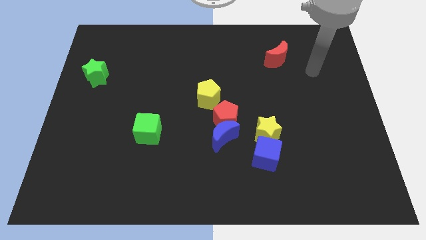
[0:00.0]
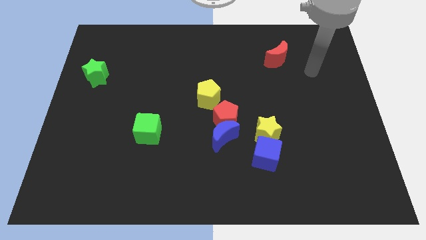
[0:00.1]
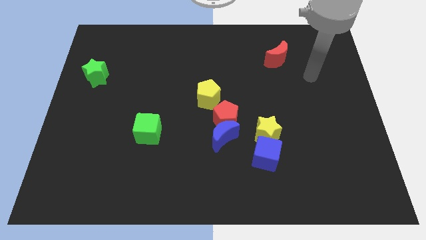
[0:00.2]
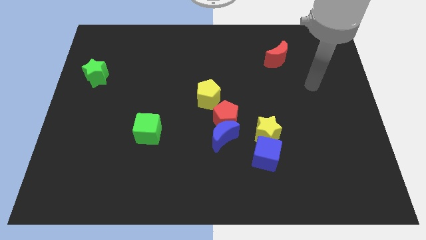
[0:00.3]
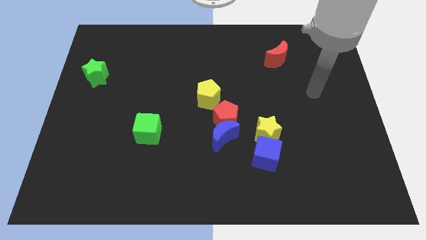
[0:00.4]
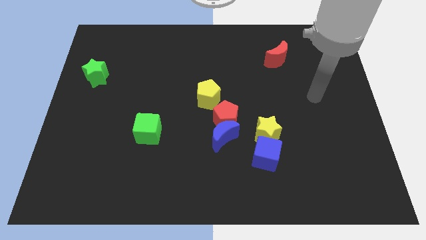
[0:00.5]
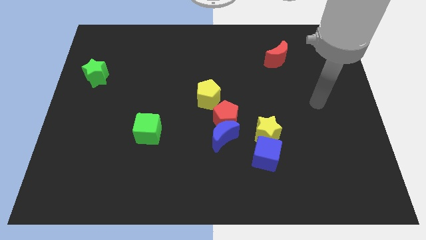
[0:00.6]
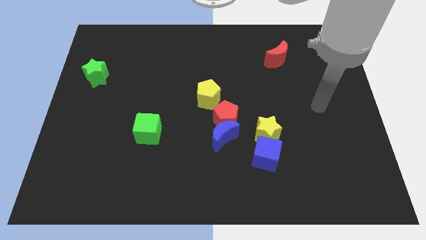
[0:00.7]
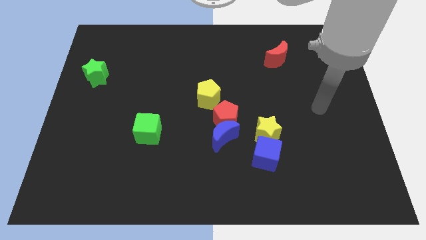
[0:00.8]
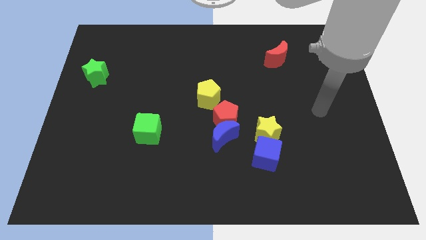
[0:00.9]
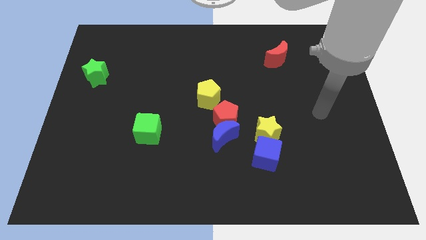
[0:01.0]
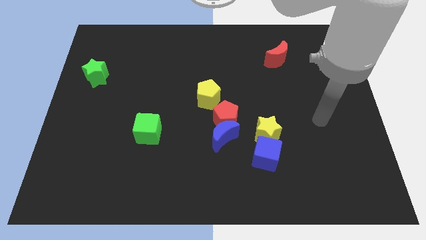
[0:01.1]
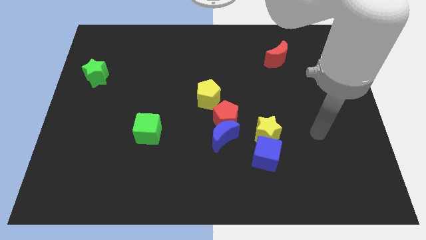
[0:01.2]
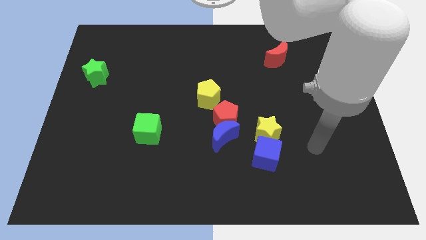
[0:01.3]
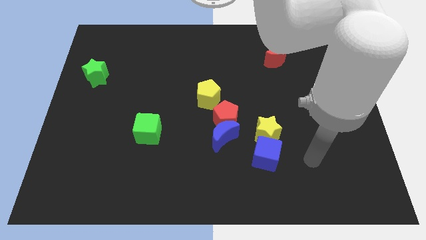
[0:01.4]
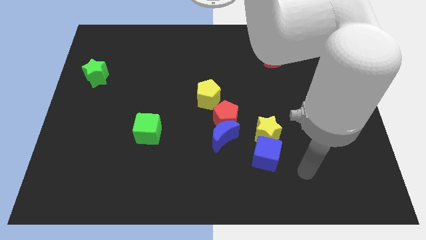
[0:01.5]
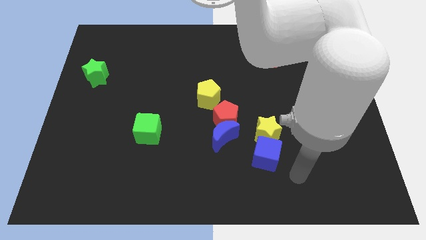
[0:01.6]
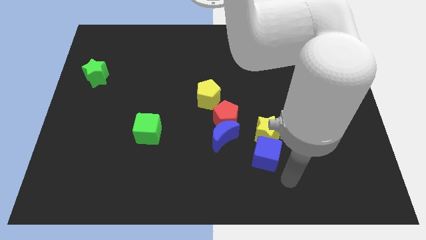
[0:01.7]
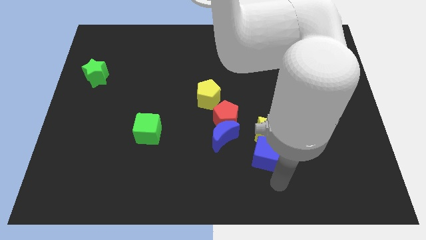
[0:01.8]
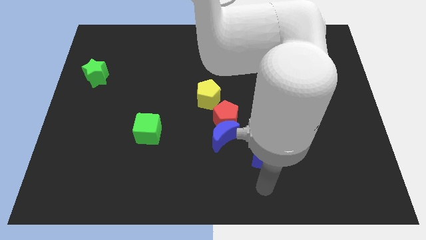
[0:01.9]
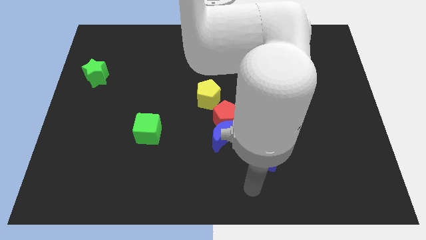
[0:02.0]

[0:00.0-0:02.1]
slide your arm to the bottom left of blue cube

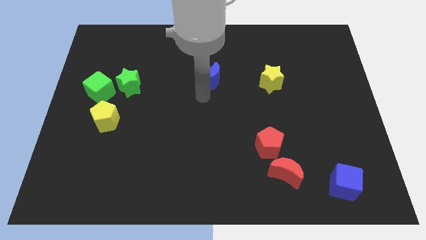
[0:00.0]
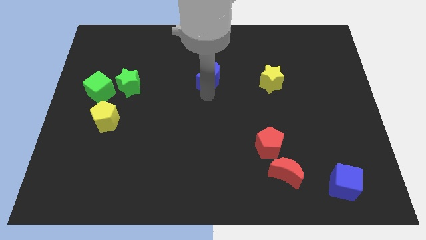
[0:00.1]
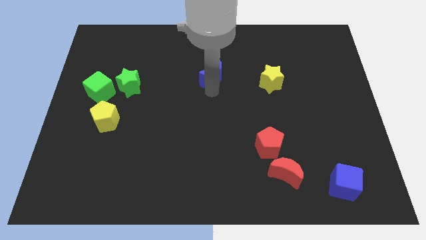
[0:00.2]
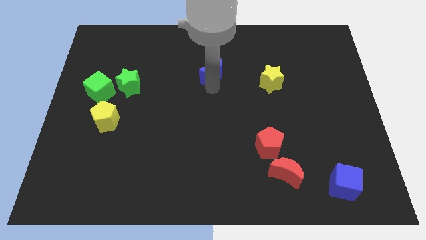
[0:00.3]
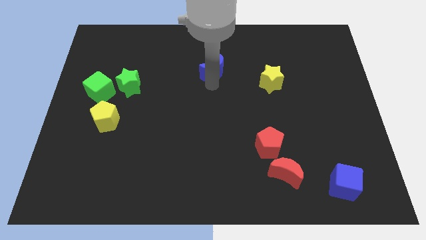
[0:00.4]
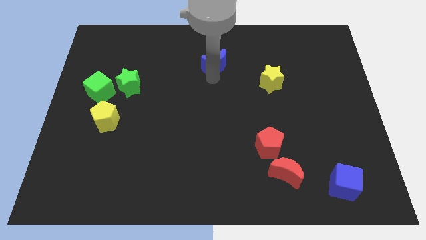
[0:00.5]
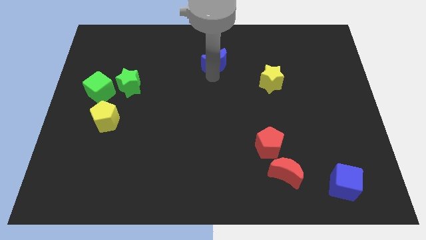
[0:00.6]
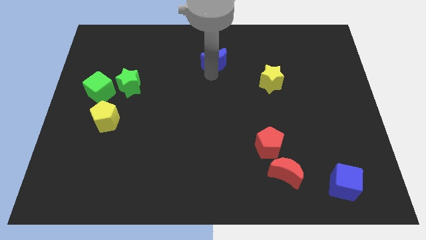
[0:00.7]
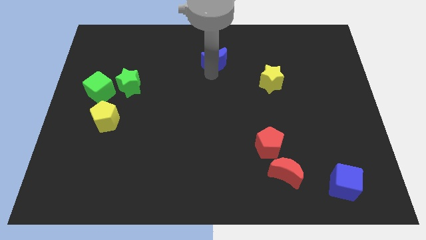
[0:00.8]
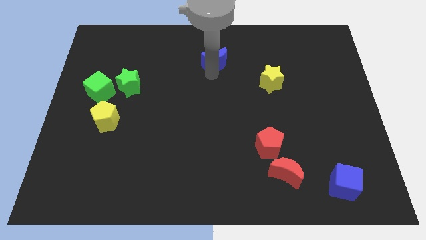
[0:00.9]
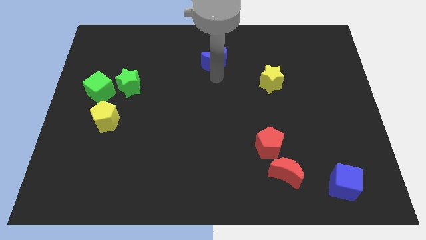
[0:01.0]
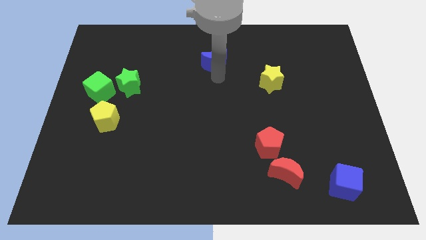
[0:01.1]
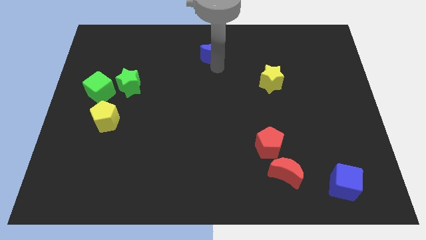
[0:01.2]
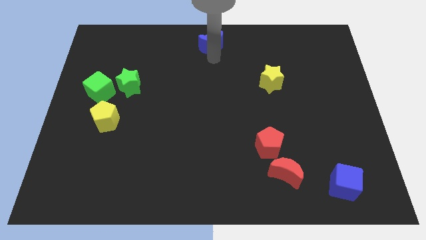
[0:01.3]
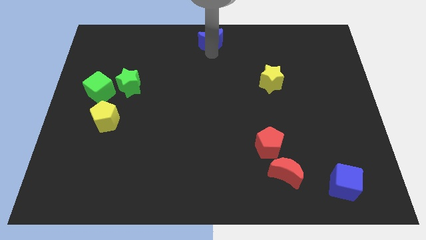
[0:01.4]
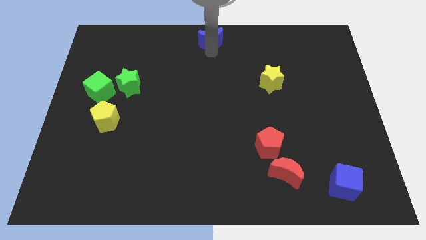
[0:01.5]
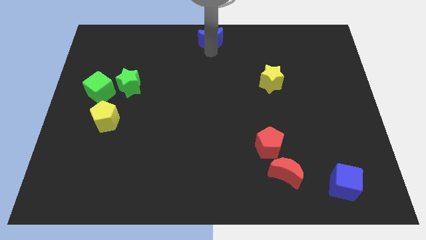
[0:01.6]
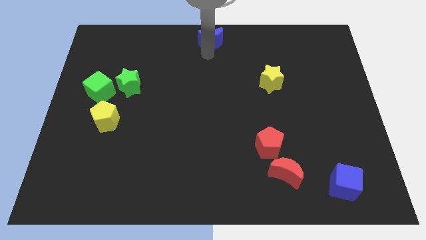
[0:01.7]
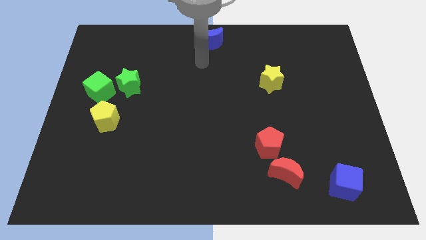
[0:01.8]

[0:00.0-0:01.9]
push the blue moon to the top center

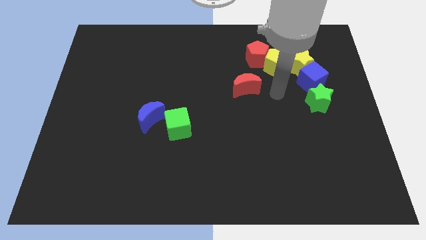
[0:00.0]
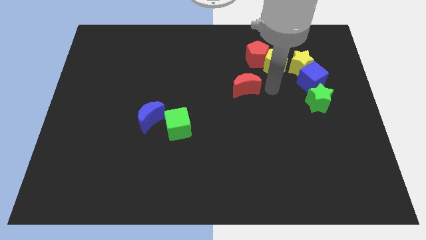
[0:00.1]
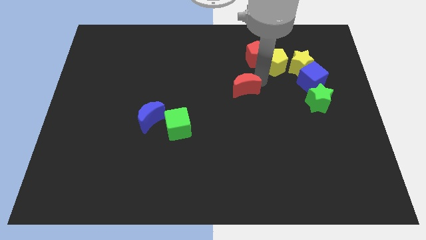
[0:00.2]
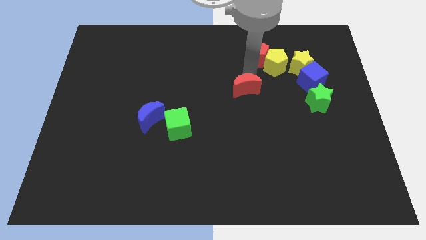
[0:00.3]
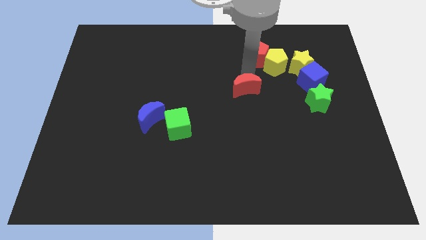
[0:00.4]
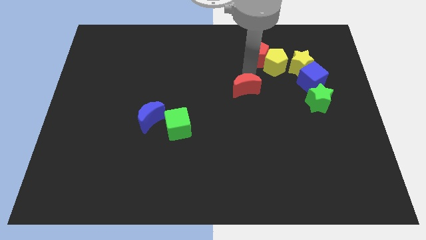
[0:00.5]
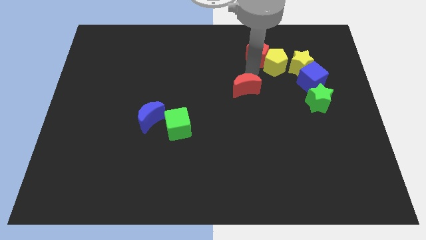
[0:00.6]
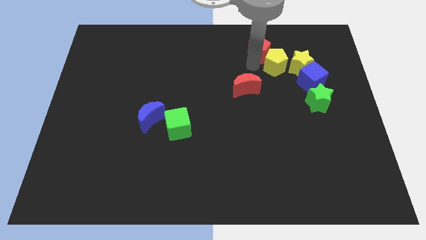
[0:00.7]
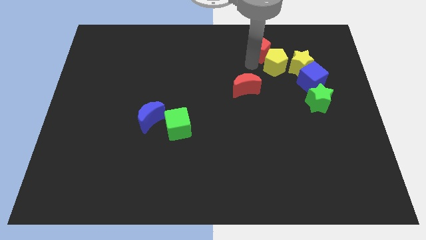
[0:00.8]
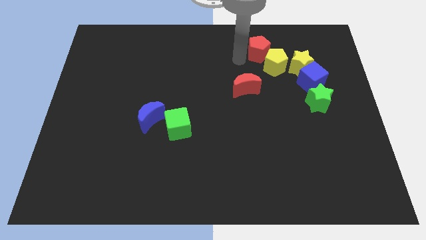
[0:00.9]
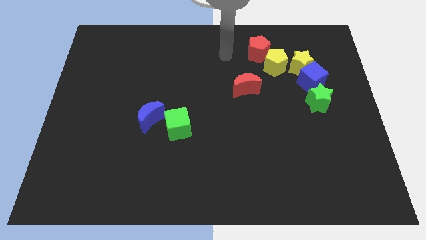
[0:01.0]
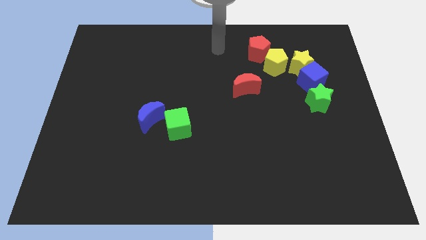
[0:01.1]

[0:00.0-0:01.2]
push the red pentagon slightly to the top

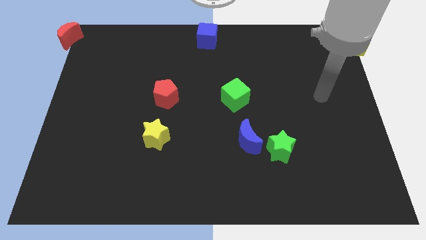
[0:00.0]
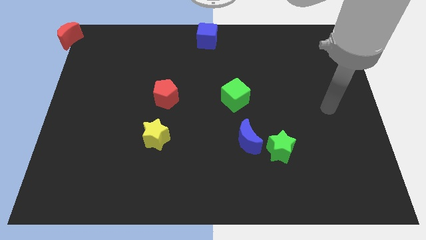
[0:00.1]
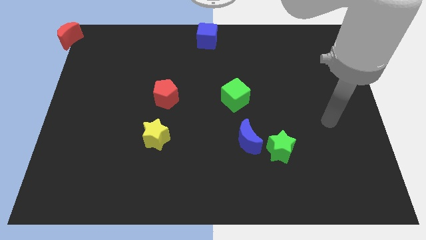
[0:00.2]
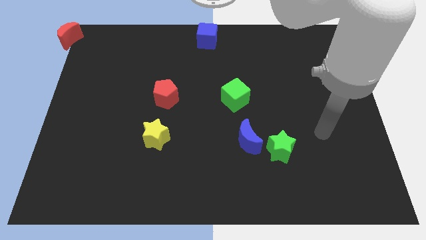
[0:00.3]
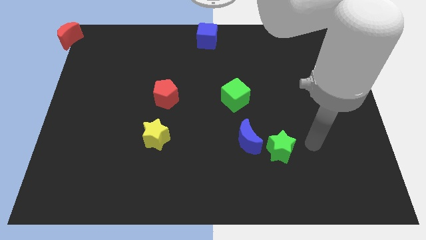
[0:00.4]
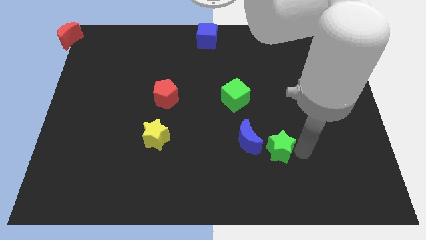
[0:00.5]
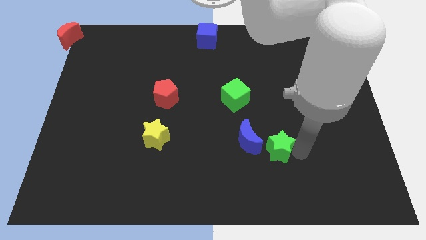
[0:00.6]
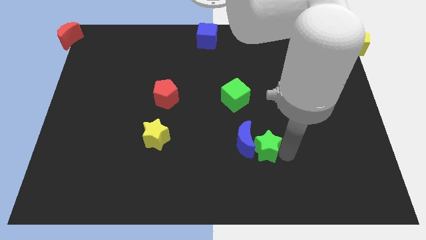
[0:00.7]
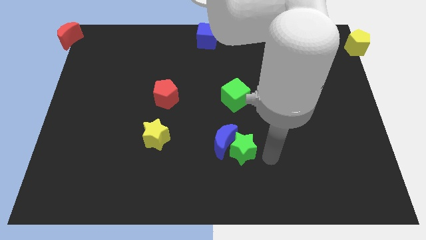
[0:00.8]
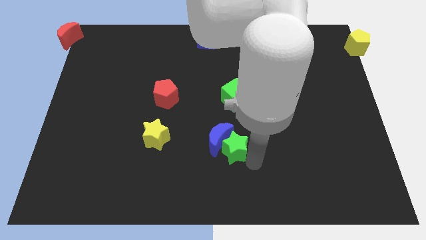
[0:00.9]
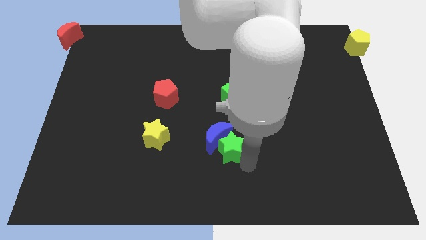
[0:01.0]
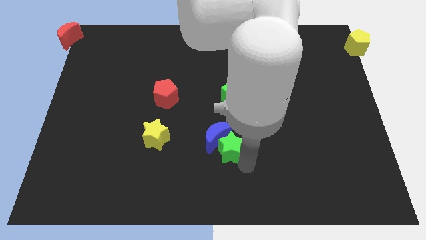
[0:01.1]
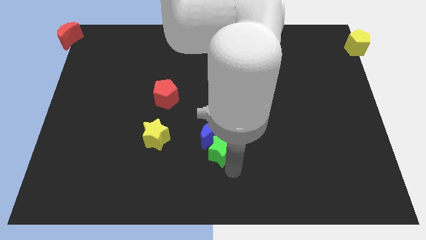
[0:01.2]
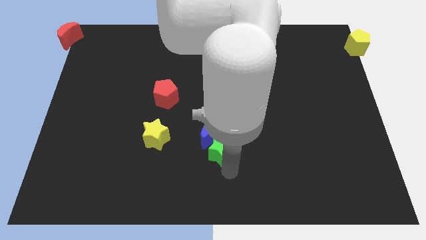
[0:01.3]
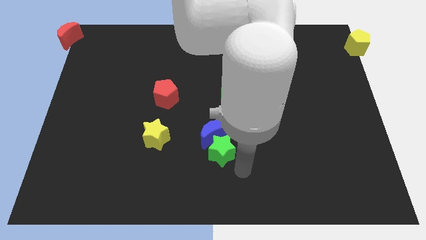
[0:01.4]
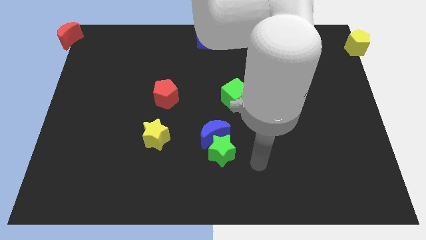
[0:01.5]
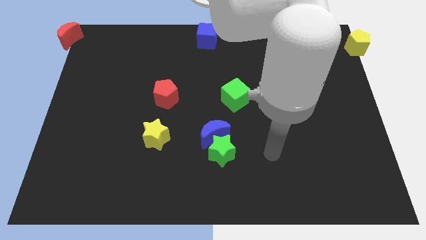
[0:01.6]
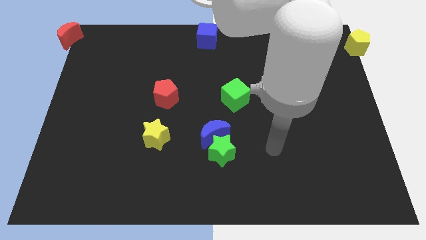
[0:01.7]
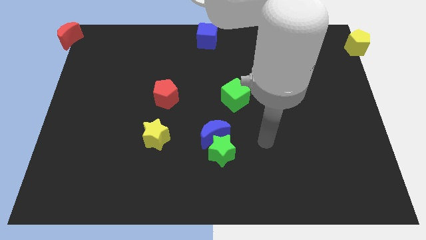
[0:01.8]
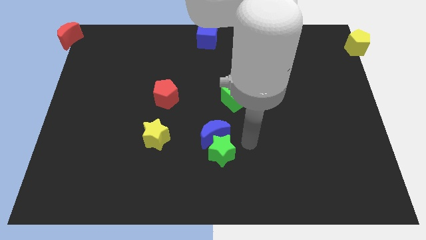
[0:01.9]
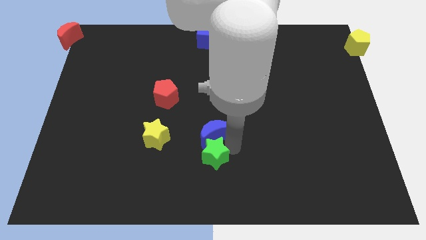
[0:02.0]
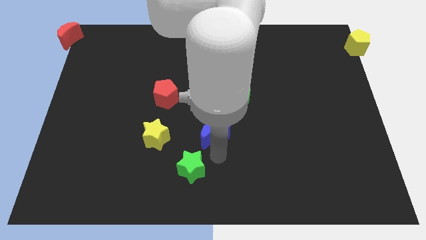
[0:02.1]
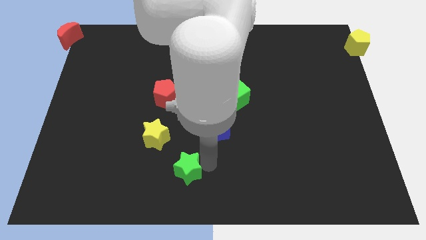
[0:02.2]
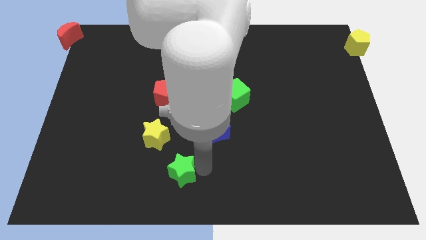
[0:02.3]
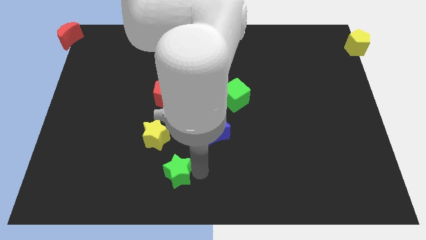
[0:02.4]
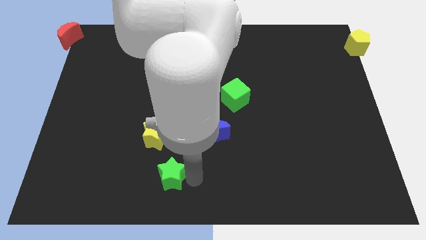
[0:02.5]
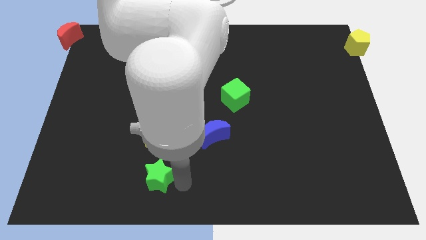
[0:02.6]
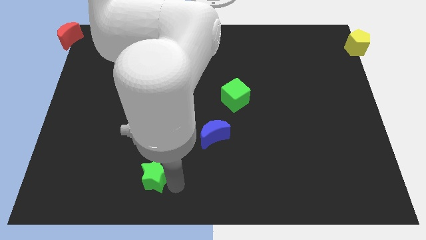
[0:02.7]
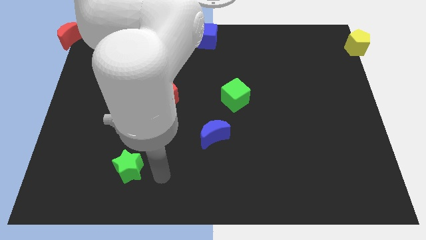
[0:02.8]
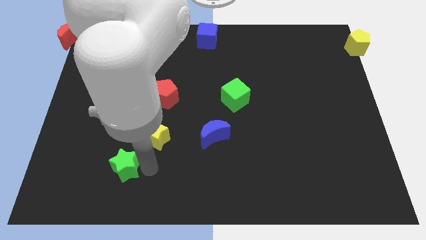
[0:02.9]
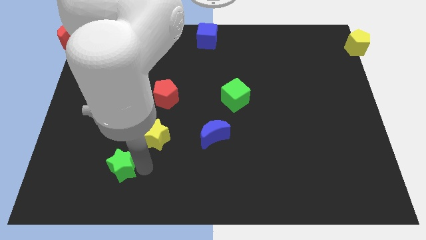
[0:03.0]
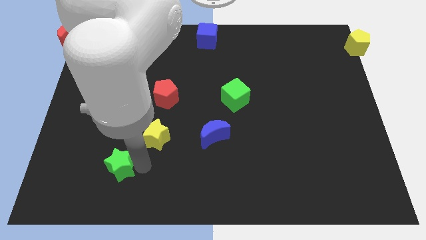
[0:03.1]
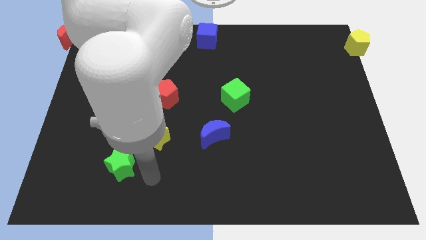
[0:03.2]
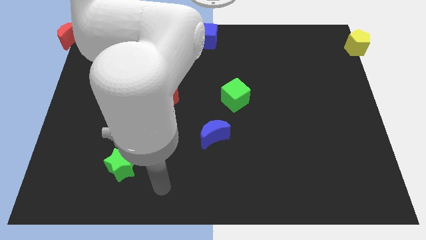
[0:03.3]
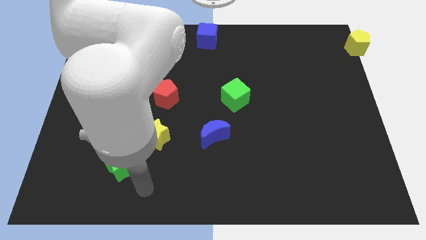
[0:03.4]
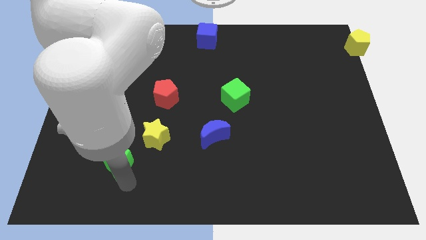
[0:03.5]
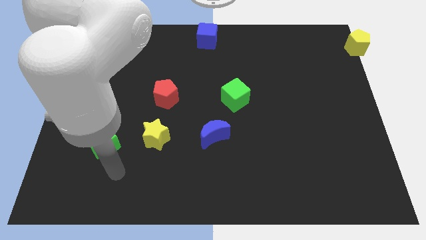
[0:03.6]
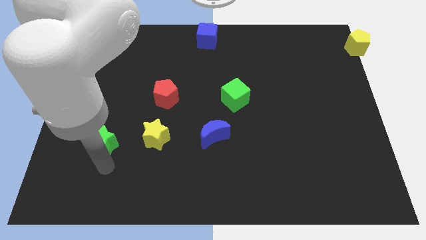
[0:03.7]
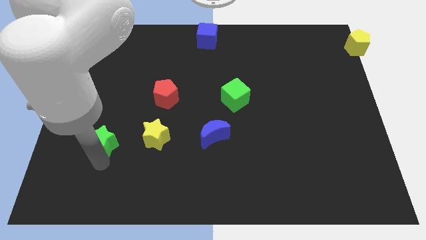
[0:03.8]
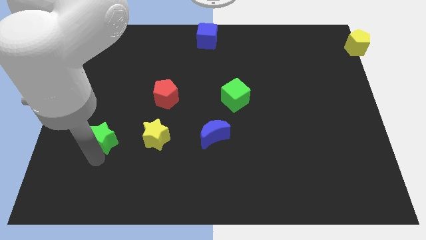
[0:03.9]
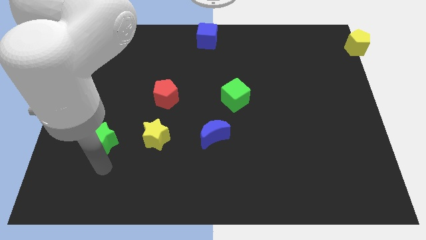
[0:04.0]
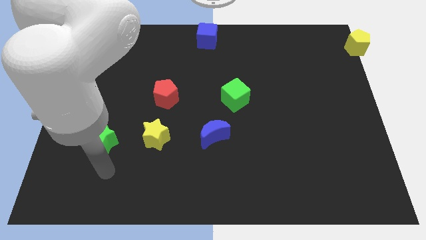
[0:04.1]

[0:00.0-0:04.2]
separate the green star from the blue crescent
